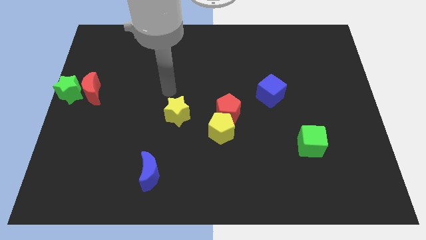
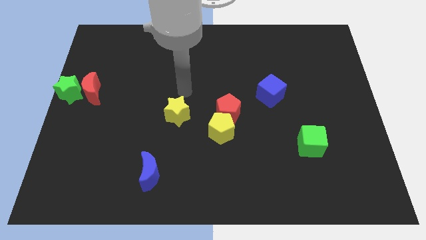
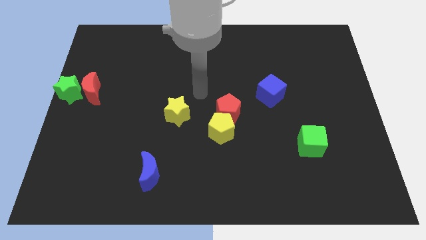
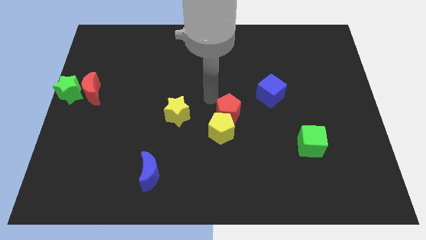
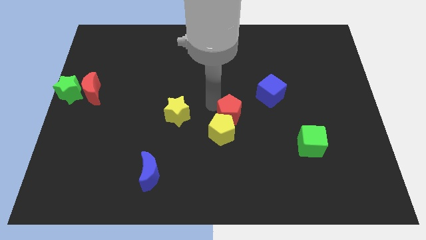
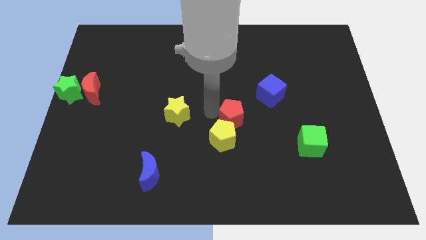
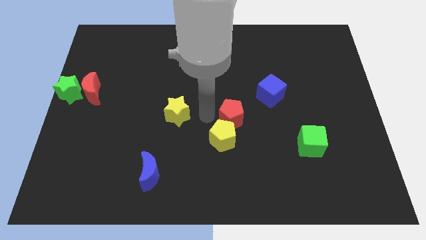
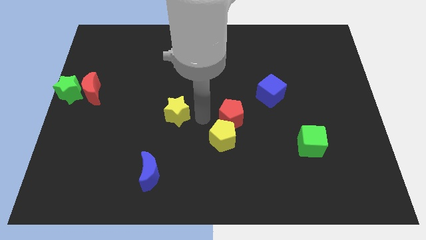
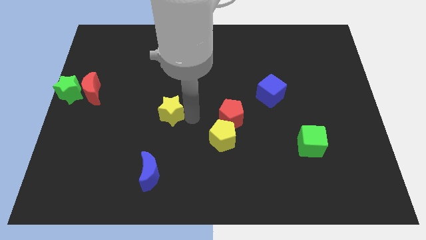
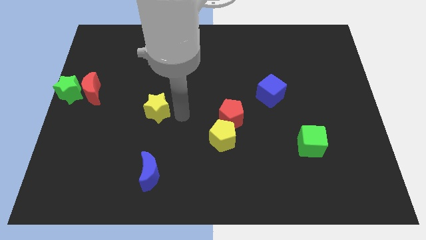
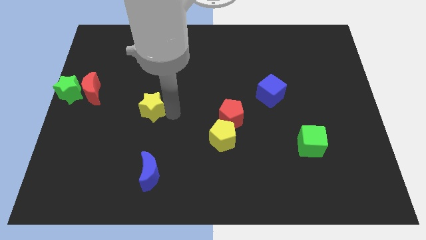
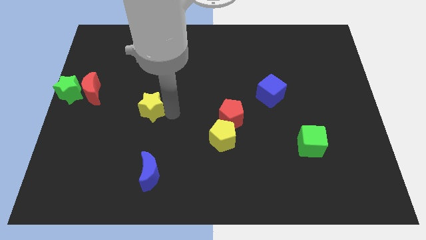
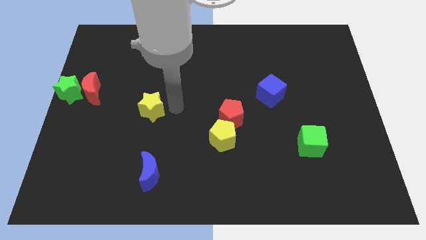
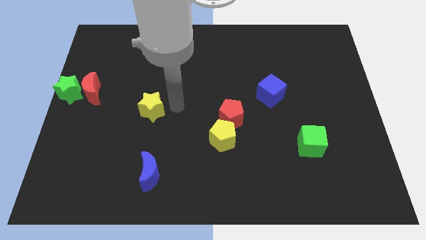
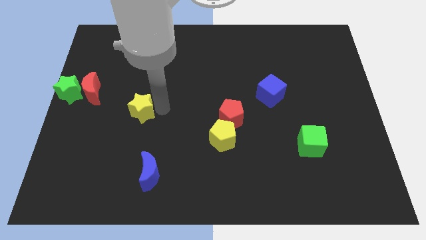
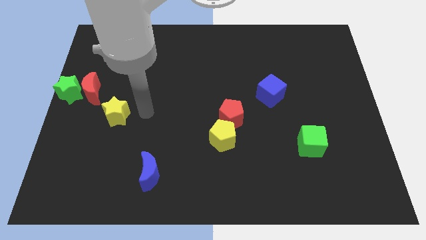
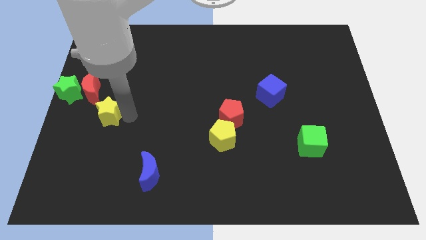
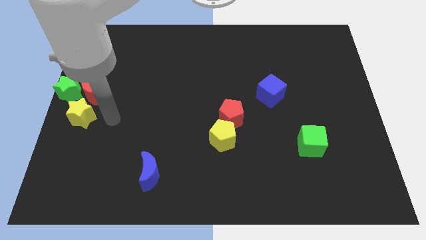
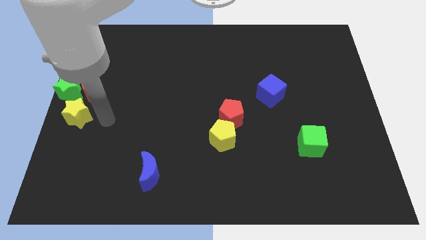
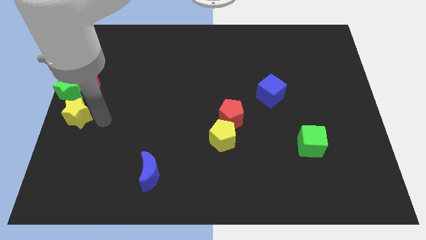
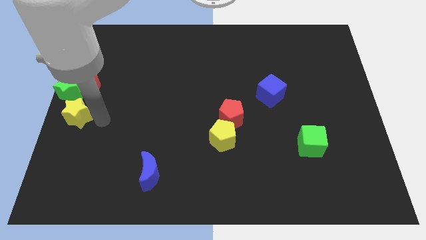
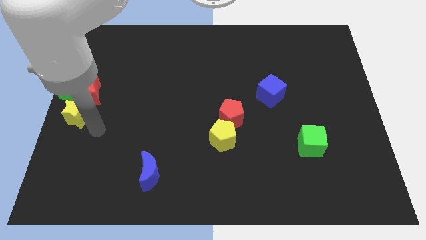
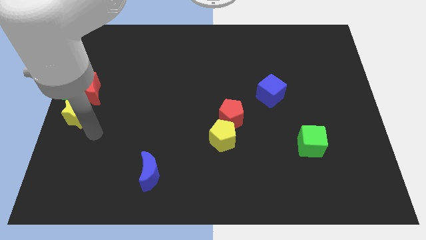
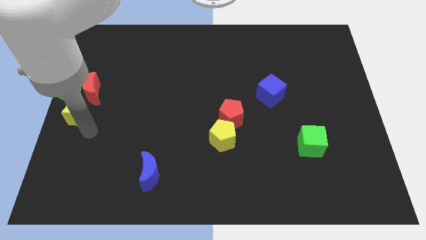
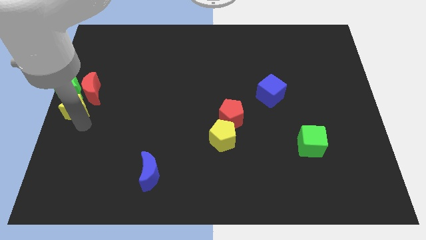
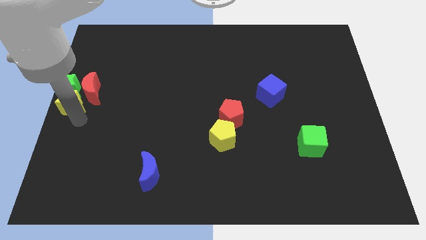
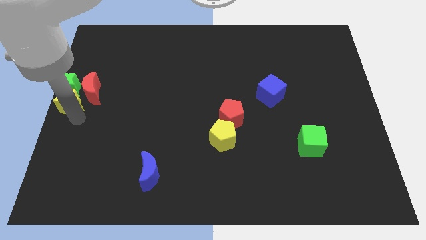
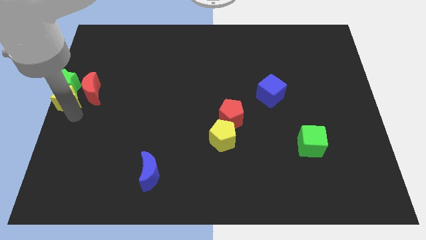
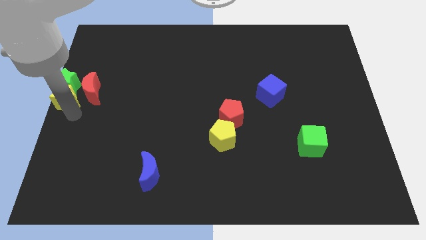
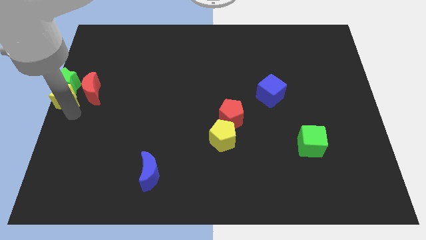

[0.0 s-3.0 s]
push the yellow star into the green star

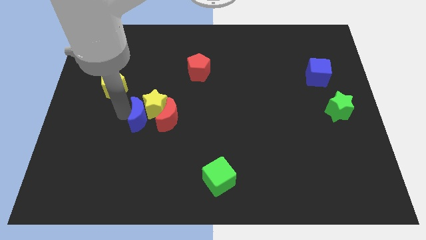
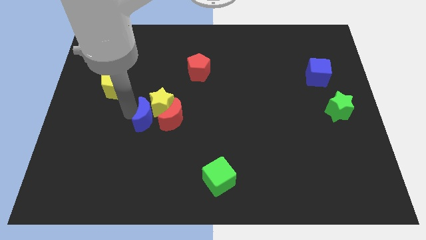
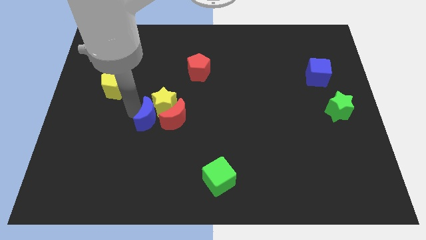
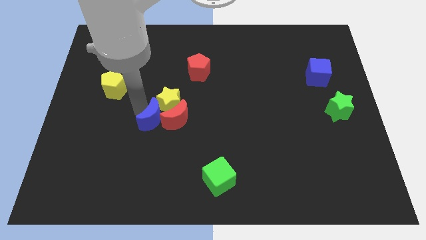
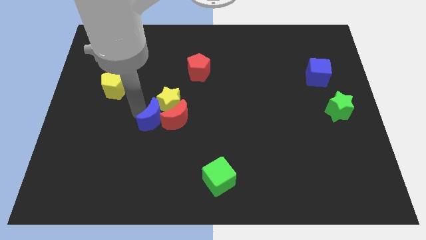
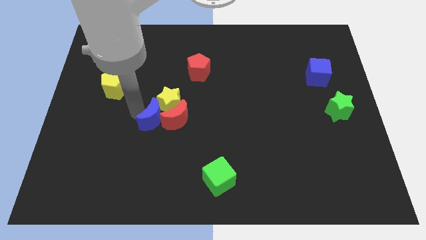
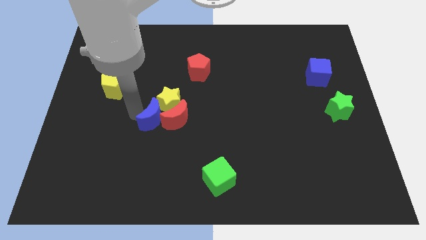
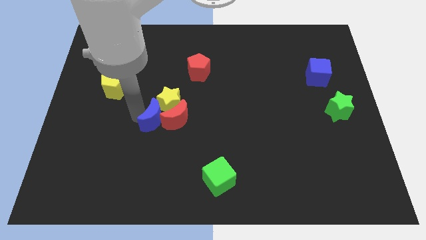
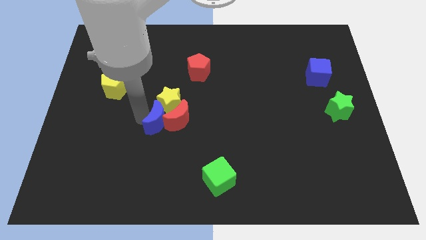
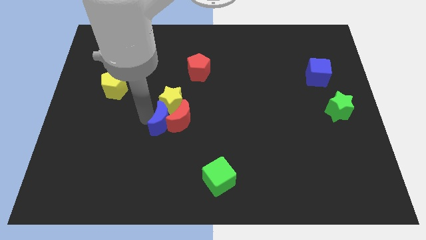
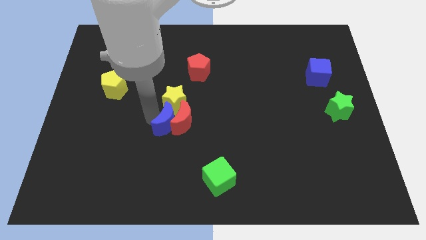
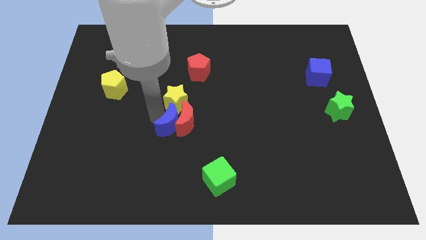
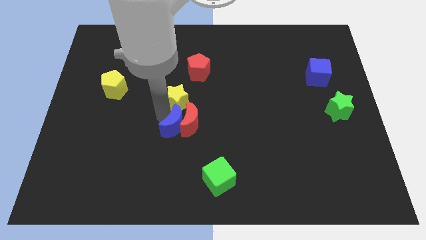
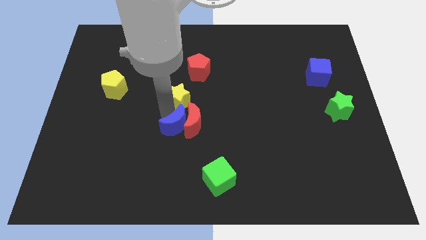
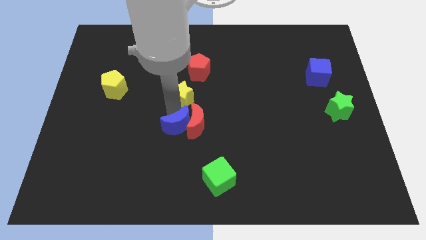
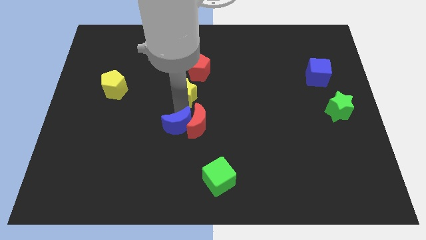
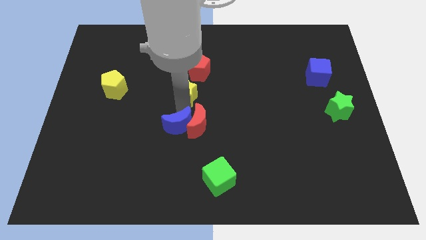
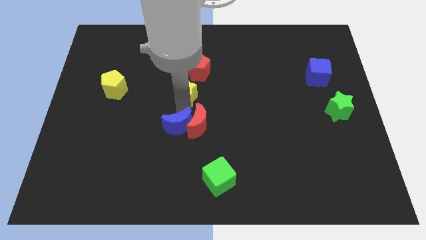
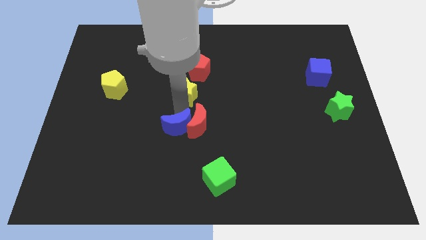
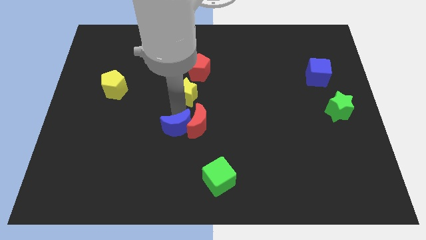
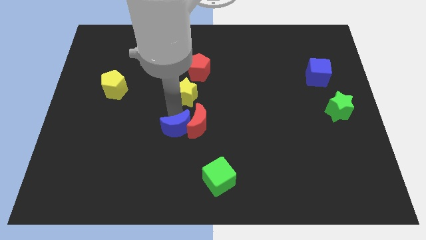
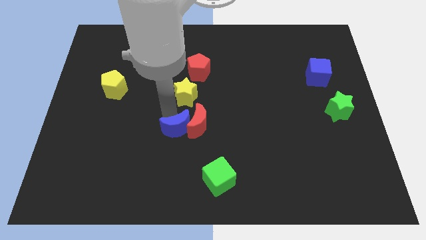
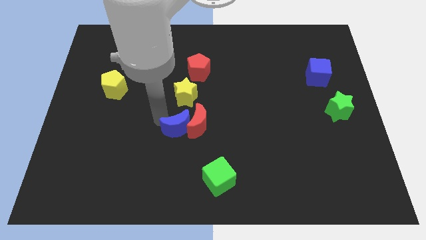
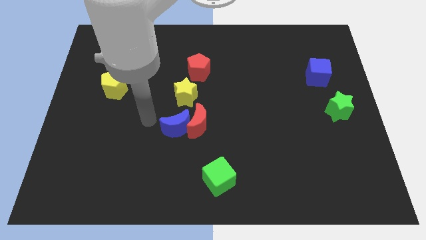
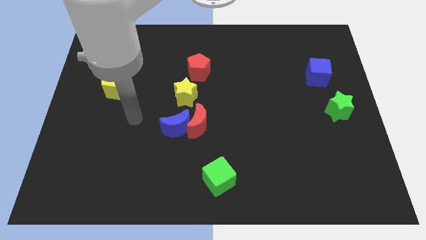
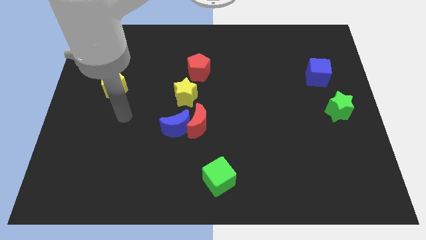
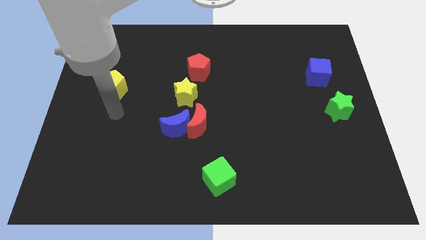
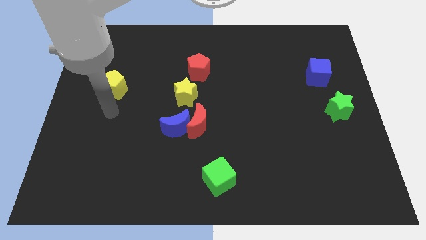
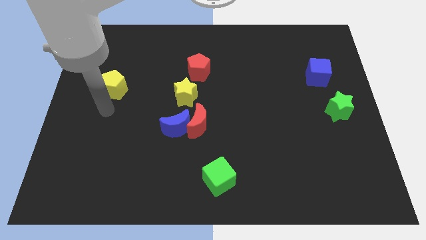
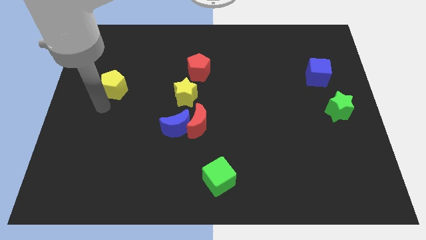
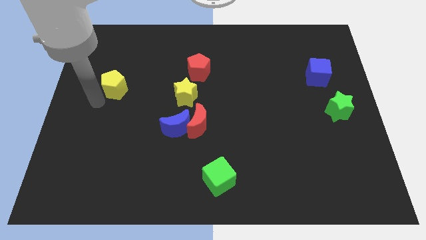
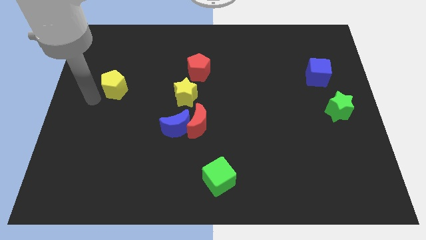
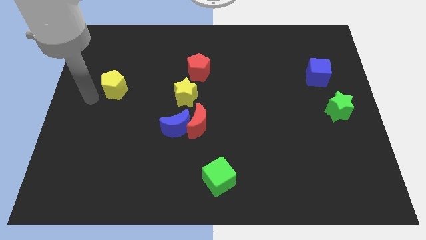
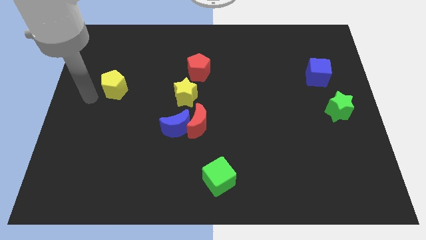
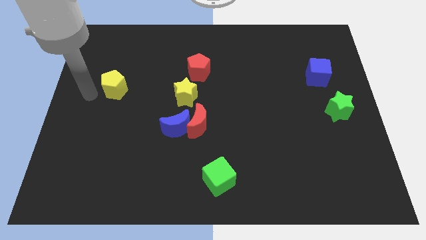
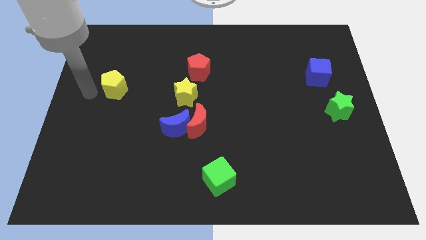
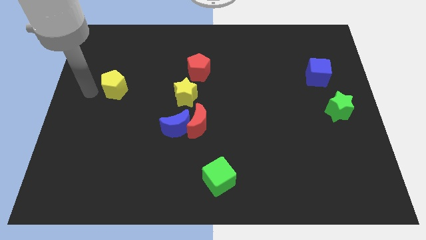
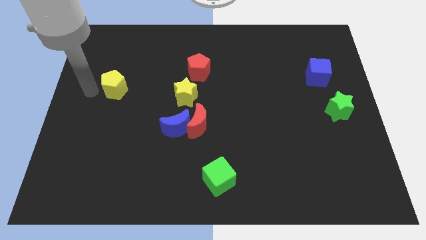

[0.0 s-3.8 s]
move the yellow star towards the center of the board

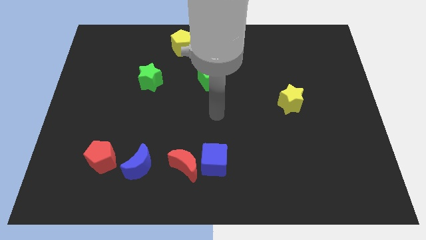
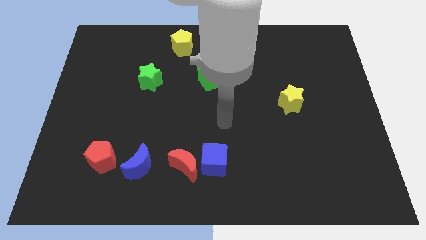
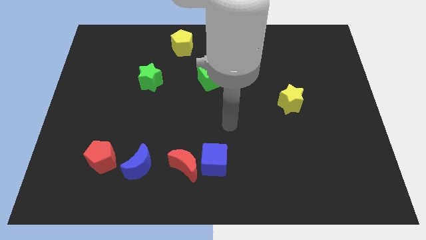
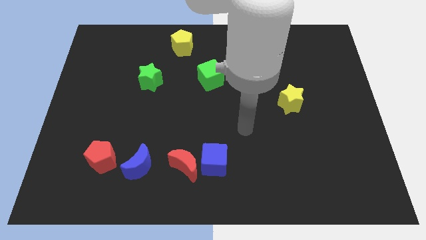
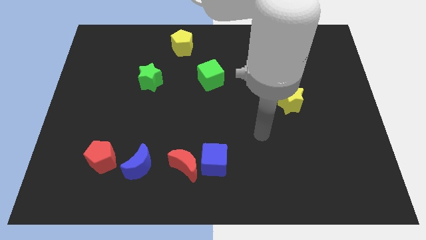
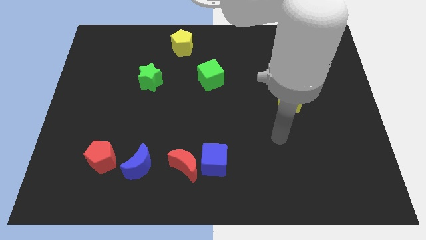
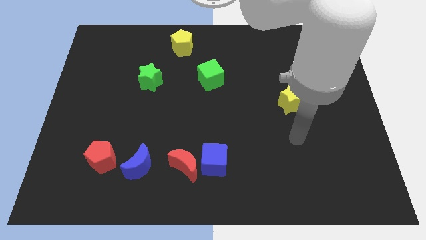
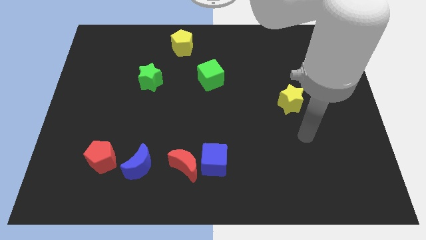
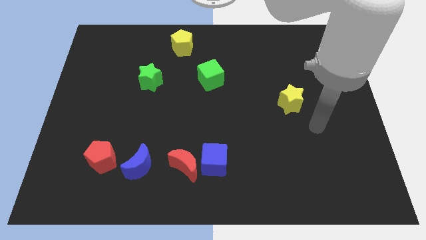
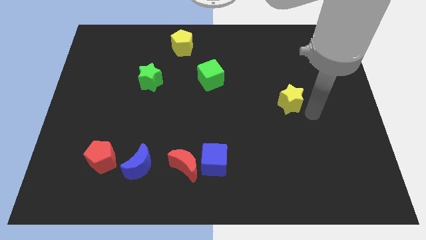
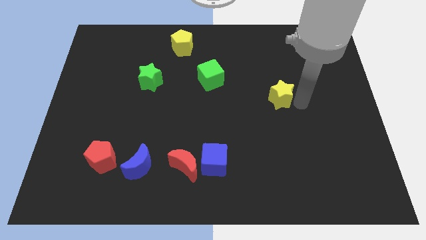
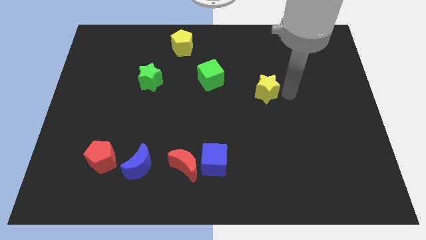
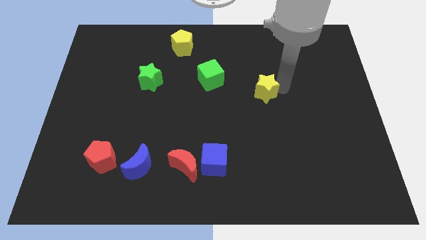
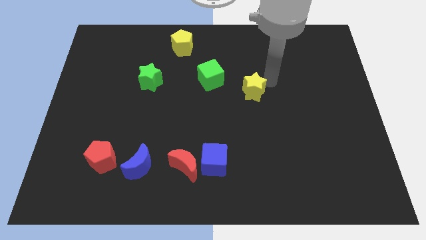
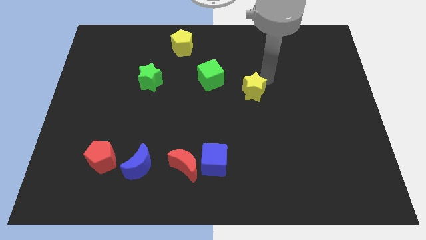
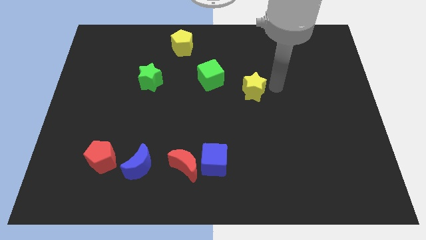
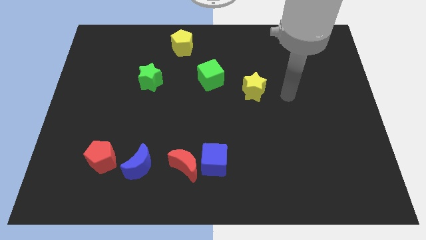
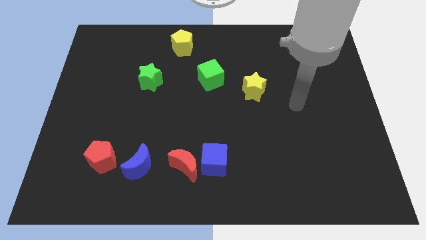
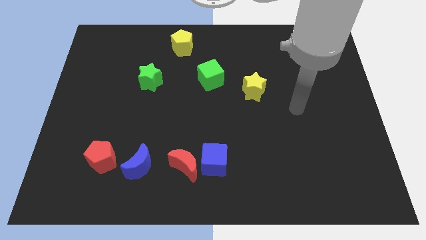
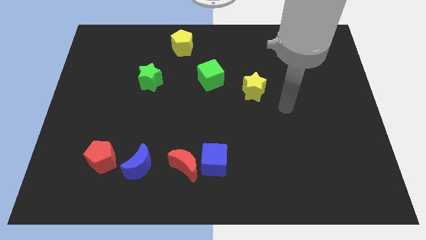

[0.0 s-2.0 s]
move the yellow star towards the green cube
